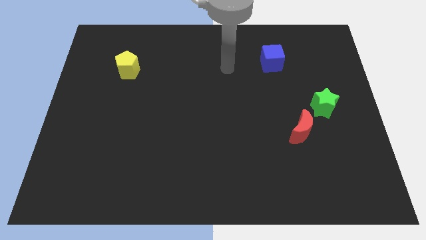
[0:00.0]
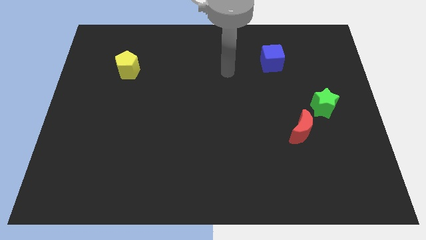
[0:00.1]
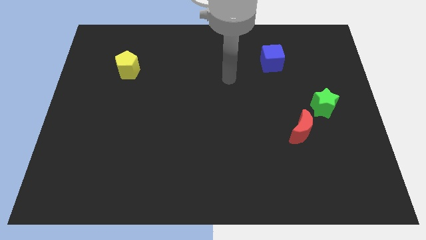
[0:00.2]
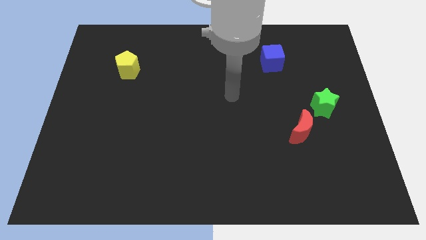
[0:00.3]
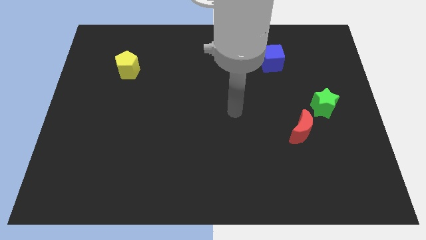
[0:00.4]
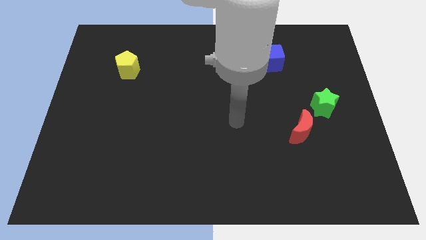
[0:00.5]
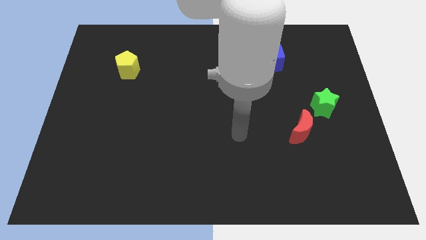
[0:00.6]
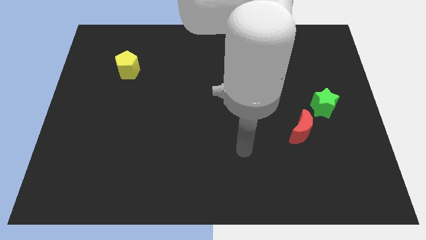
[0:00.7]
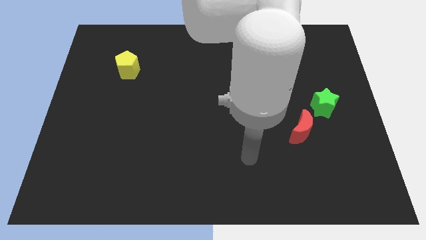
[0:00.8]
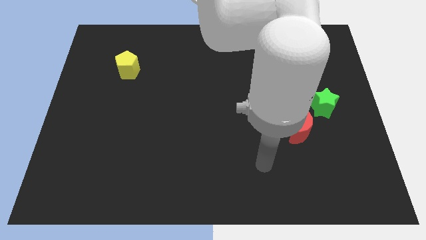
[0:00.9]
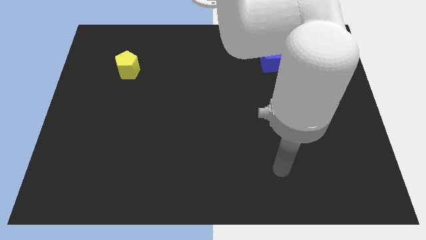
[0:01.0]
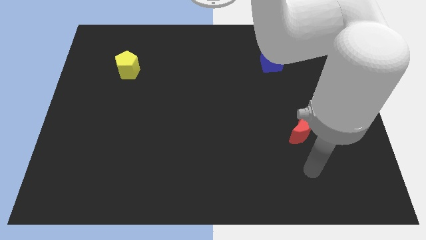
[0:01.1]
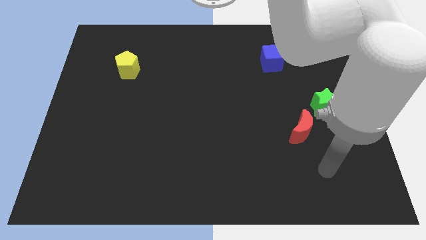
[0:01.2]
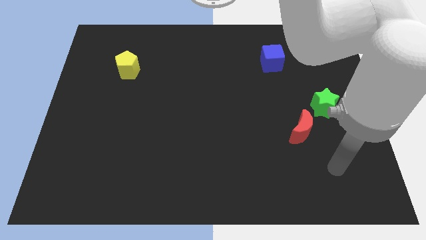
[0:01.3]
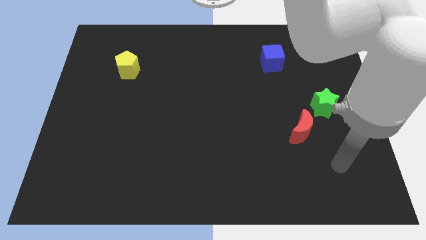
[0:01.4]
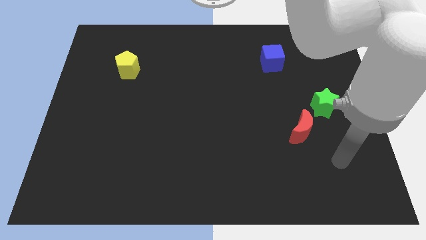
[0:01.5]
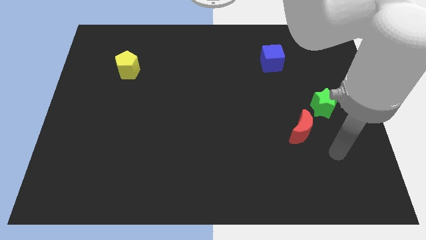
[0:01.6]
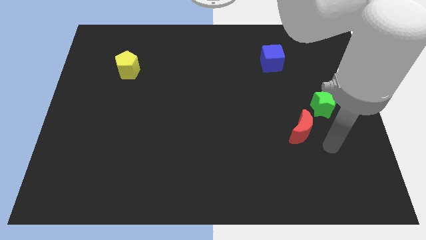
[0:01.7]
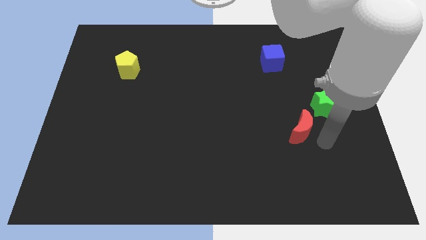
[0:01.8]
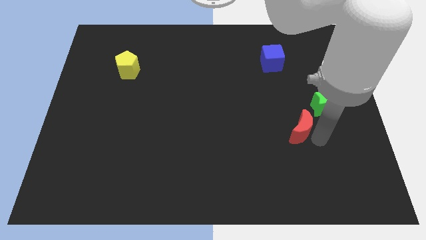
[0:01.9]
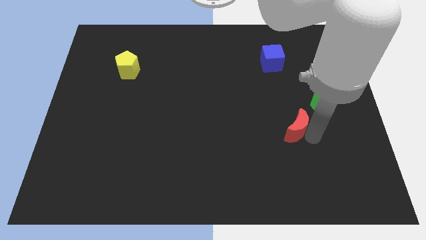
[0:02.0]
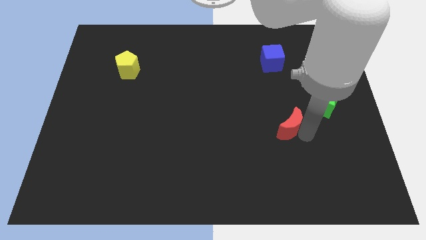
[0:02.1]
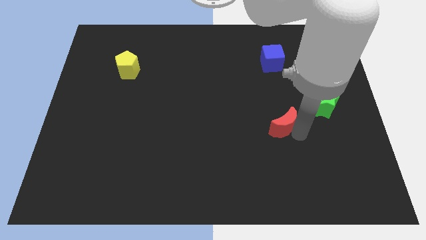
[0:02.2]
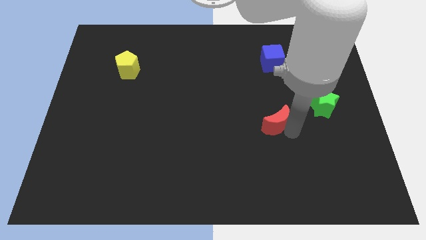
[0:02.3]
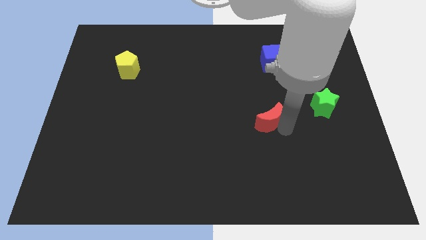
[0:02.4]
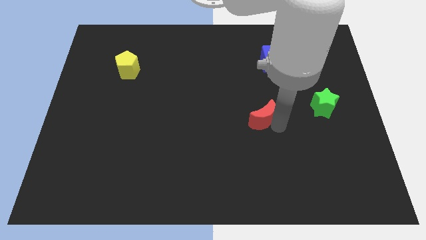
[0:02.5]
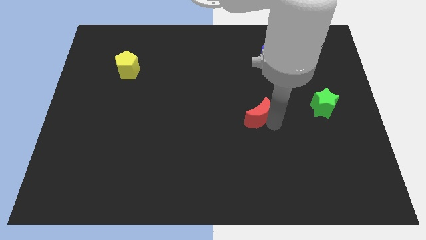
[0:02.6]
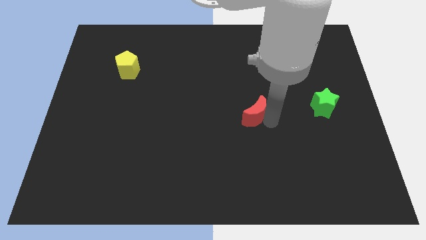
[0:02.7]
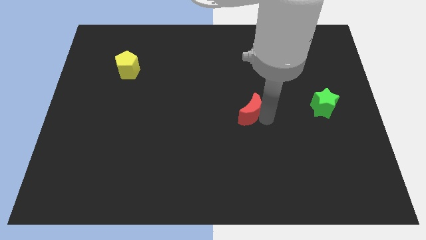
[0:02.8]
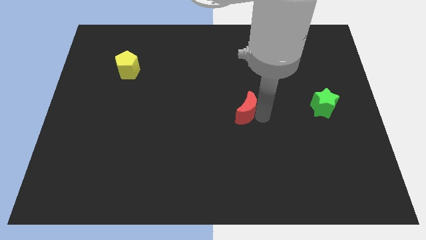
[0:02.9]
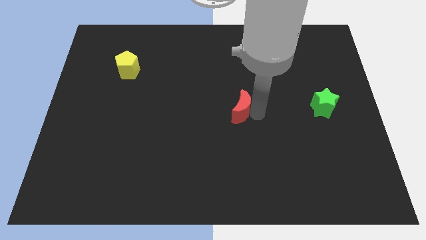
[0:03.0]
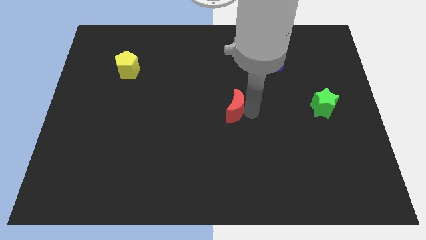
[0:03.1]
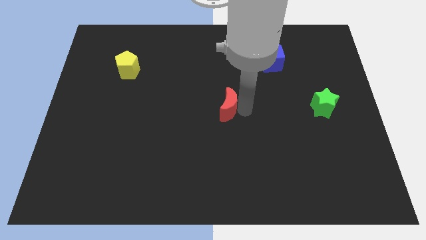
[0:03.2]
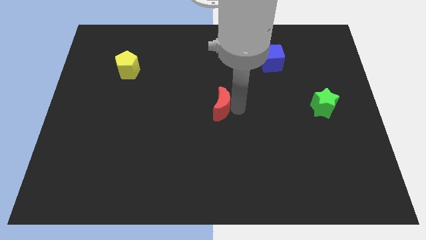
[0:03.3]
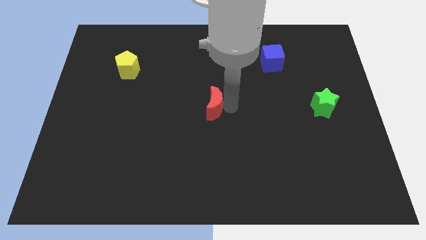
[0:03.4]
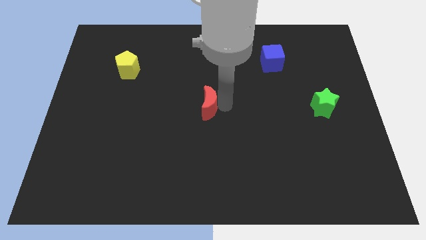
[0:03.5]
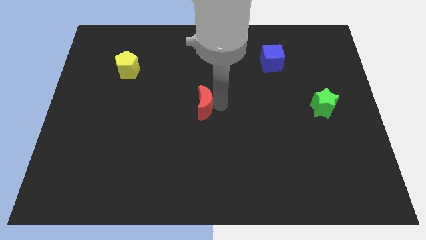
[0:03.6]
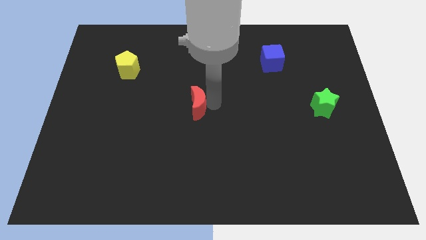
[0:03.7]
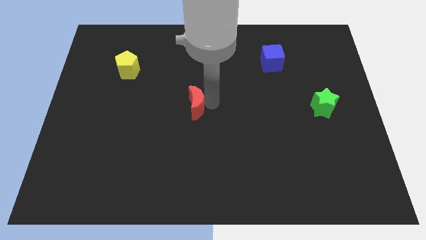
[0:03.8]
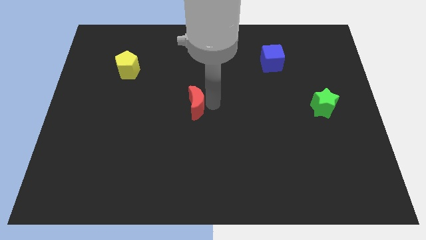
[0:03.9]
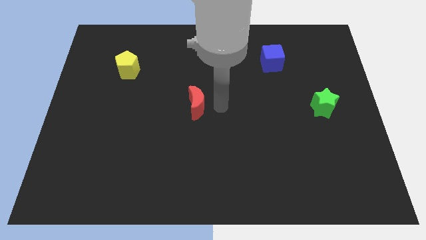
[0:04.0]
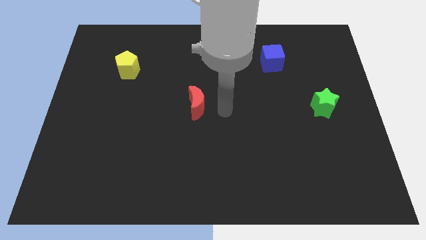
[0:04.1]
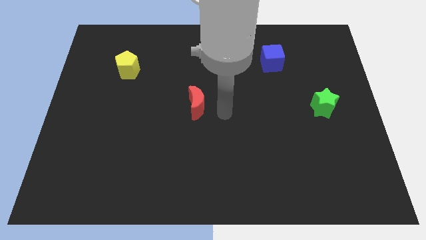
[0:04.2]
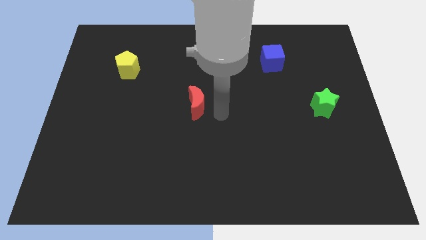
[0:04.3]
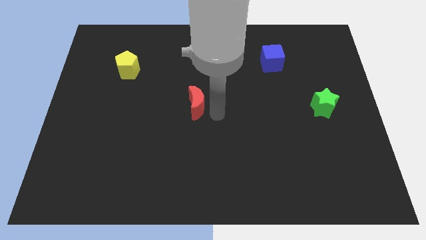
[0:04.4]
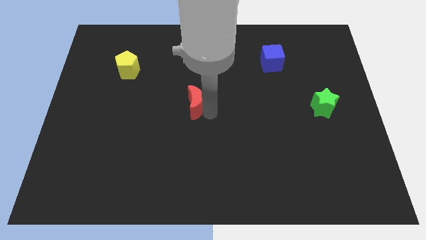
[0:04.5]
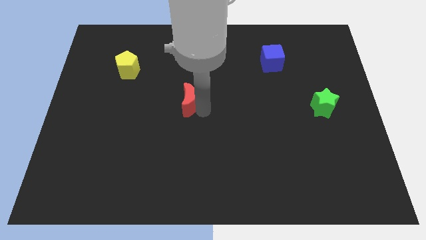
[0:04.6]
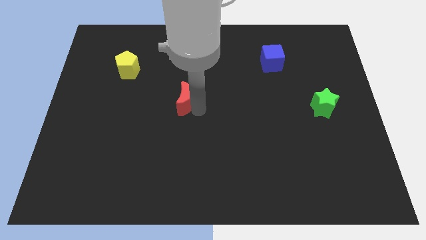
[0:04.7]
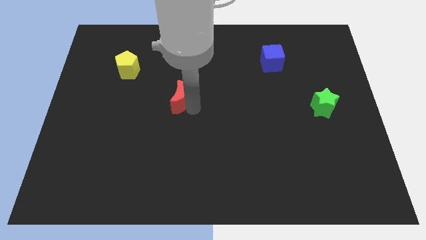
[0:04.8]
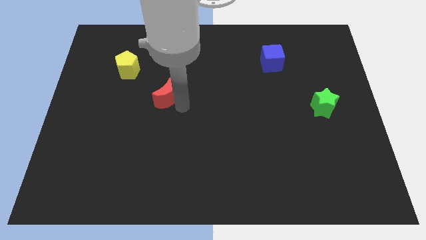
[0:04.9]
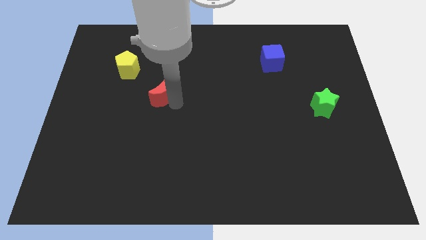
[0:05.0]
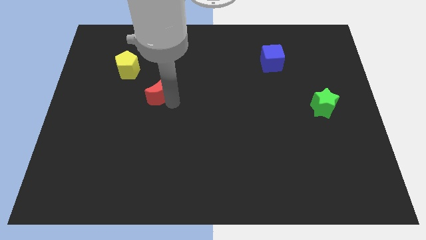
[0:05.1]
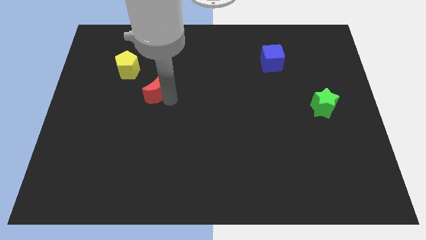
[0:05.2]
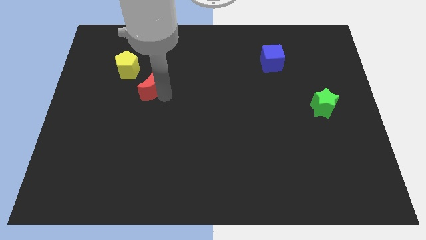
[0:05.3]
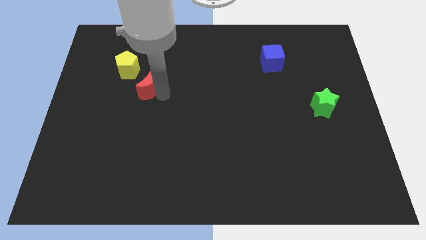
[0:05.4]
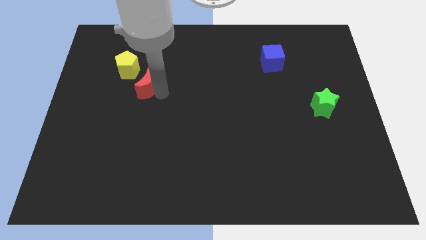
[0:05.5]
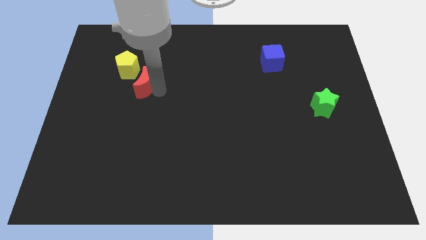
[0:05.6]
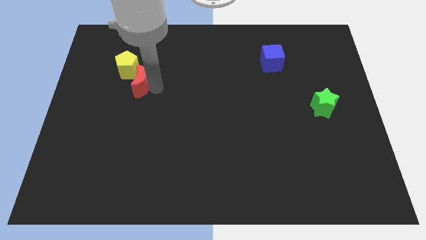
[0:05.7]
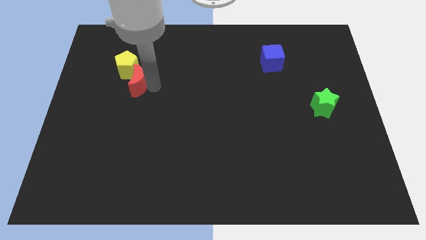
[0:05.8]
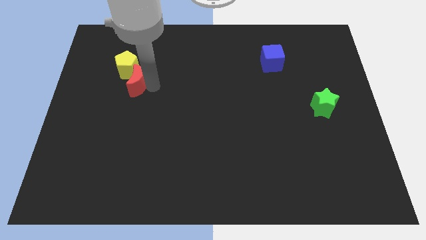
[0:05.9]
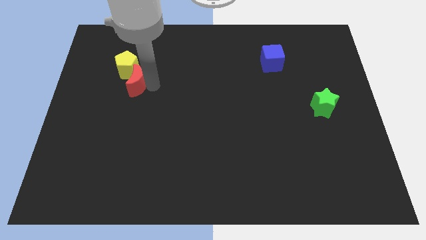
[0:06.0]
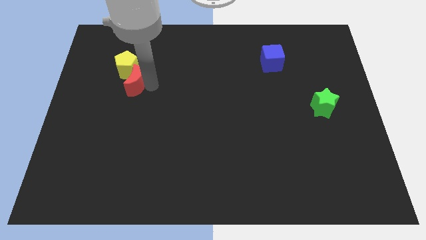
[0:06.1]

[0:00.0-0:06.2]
push the moon next to the pentagon

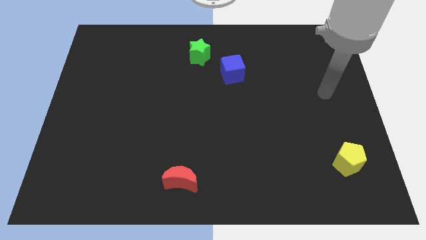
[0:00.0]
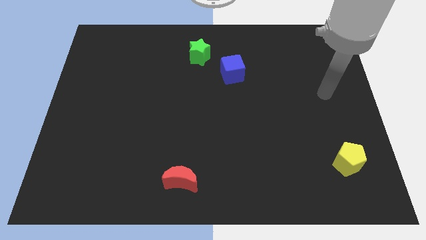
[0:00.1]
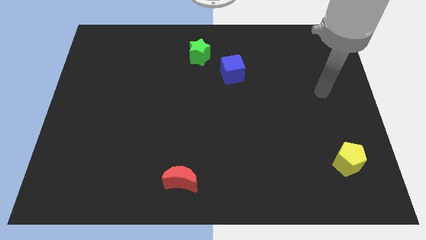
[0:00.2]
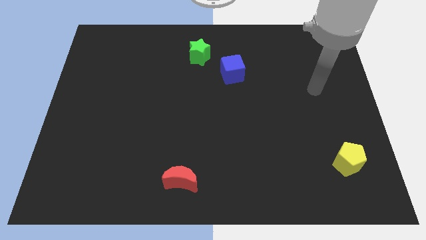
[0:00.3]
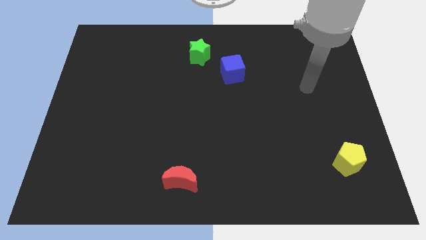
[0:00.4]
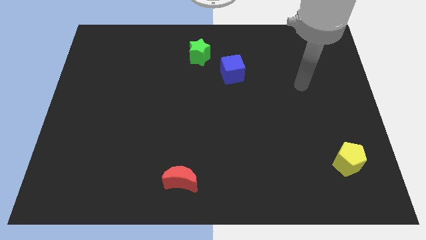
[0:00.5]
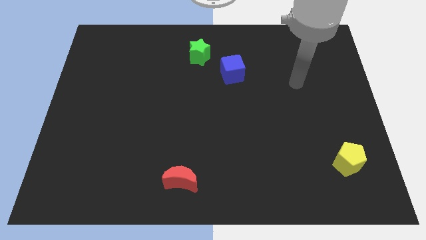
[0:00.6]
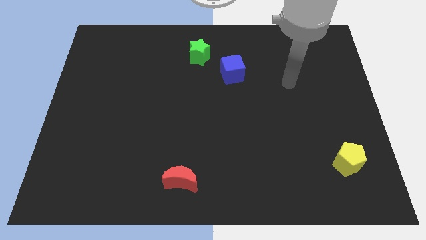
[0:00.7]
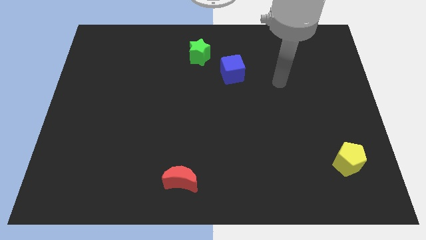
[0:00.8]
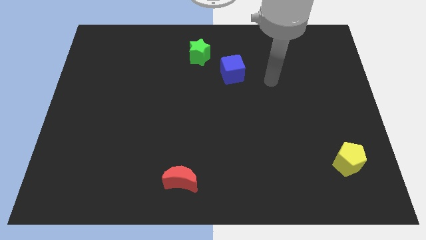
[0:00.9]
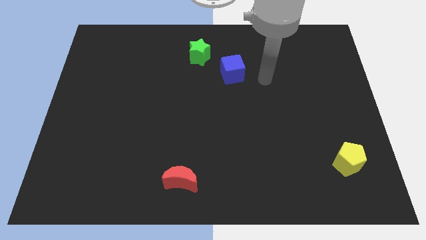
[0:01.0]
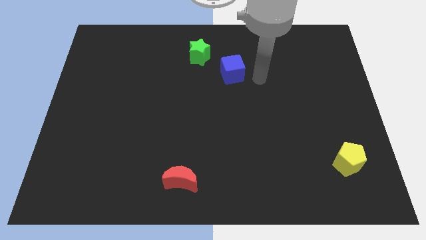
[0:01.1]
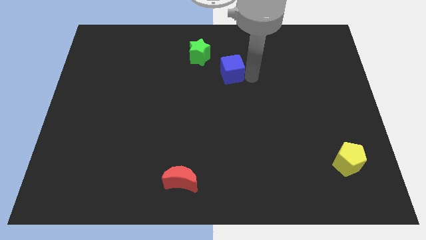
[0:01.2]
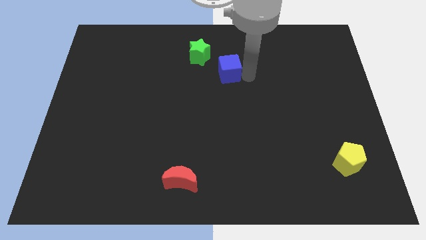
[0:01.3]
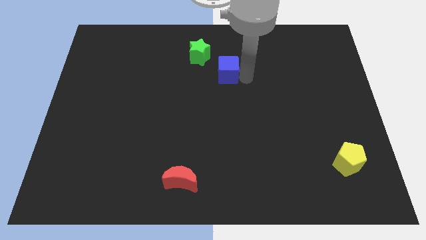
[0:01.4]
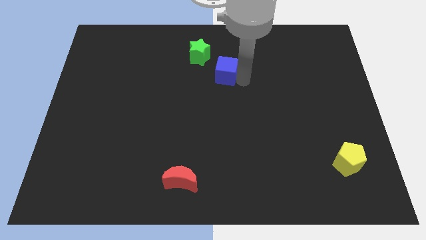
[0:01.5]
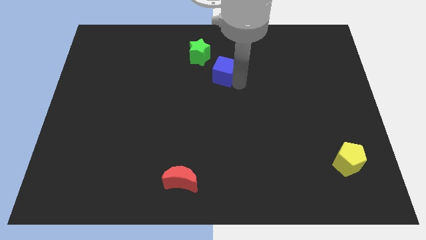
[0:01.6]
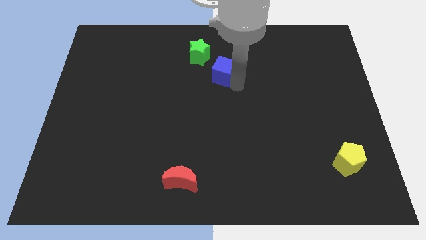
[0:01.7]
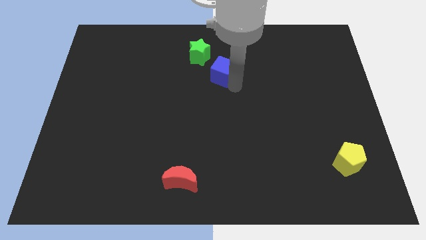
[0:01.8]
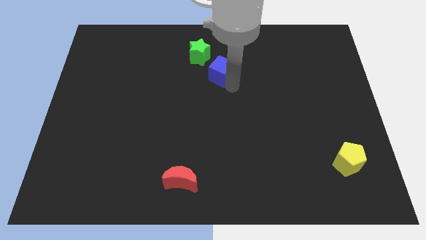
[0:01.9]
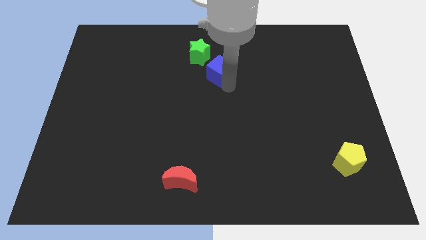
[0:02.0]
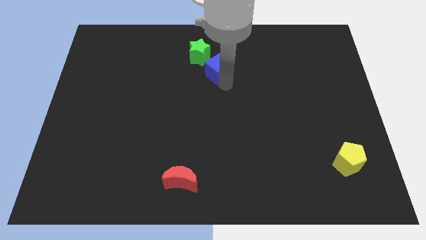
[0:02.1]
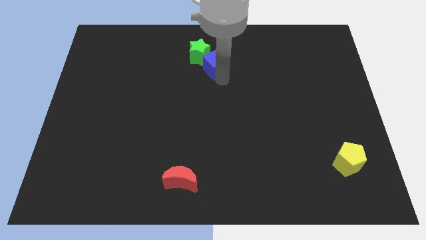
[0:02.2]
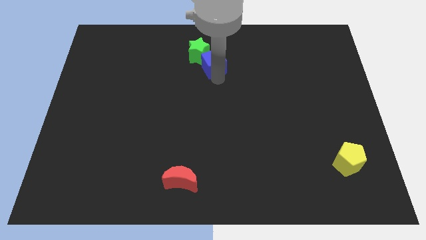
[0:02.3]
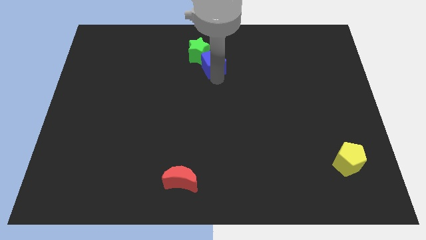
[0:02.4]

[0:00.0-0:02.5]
slide the blue cube close to the green star
